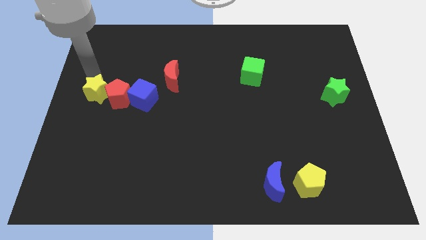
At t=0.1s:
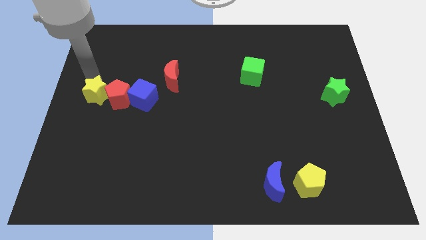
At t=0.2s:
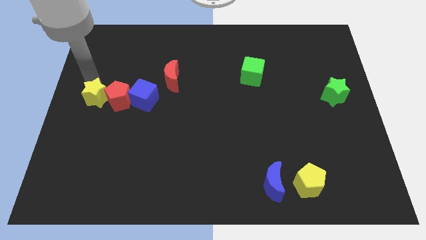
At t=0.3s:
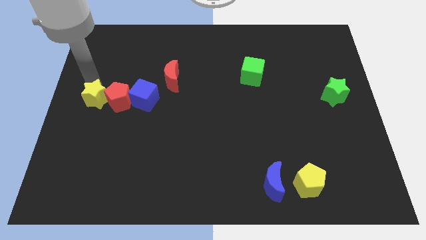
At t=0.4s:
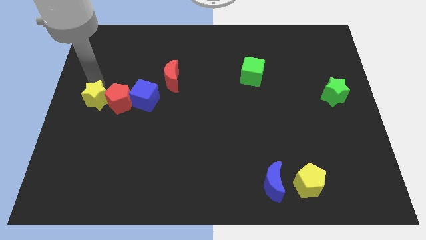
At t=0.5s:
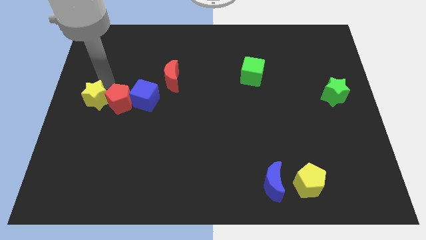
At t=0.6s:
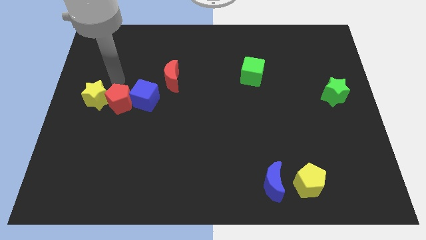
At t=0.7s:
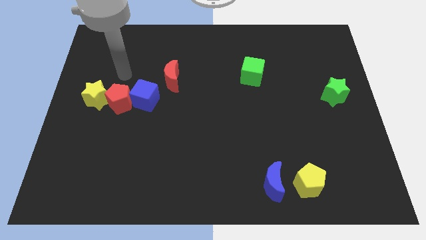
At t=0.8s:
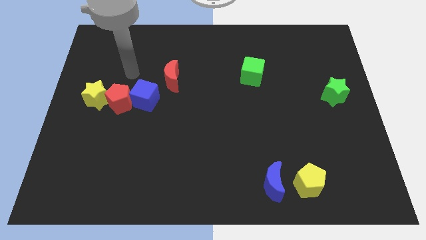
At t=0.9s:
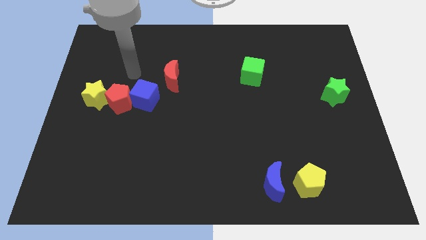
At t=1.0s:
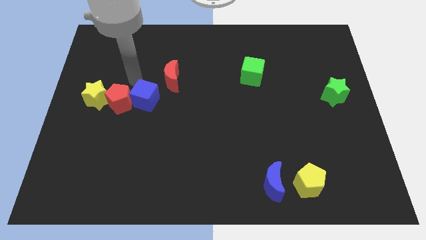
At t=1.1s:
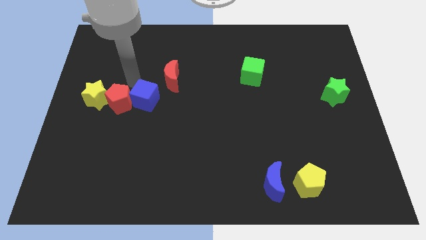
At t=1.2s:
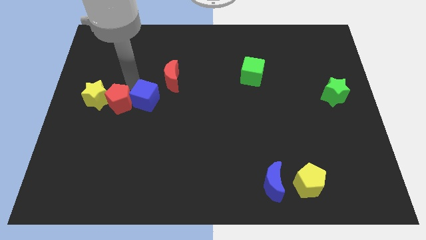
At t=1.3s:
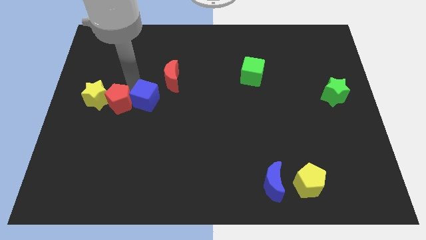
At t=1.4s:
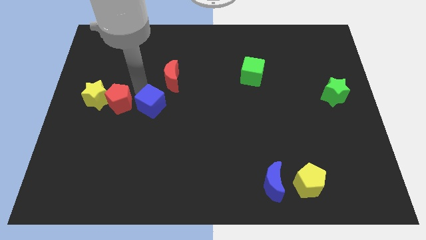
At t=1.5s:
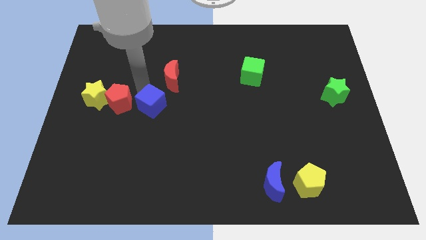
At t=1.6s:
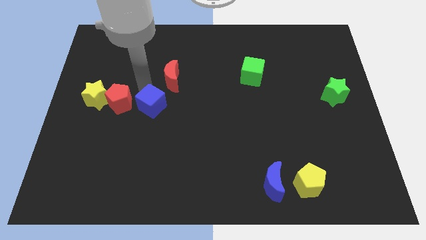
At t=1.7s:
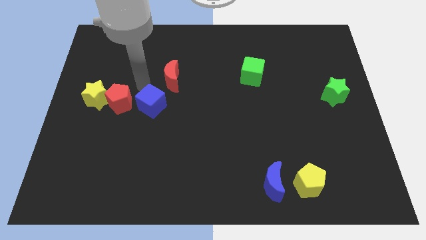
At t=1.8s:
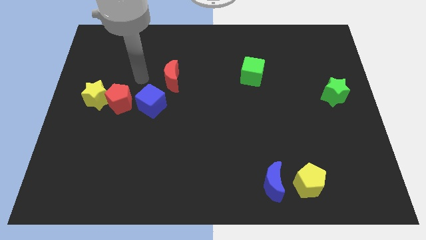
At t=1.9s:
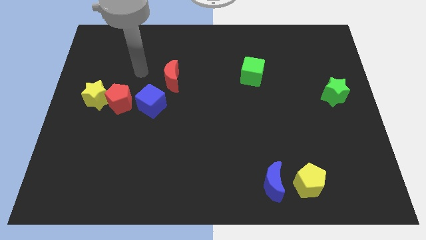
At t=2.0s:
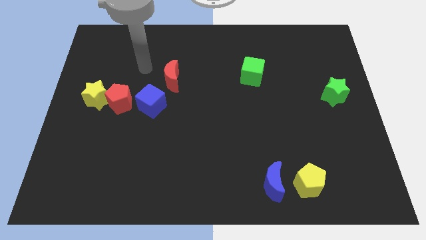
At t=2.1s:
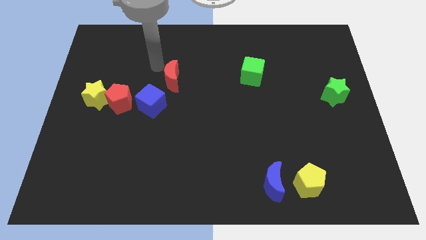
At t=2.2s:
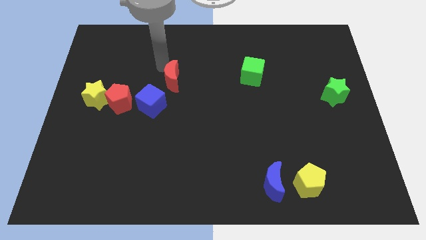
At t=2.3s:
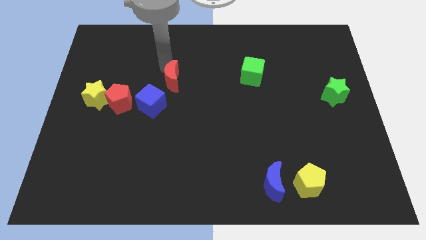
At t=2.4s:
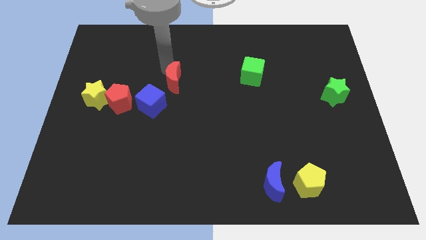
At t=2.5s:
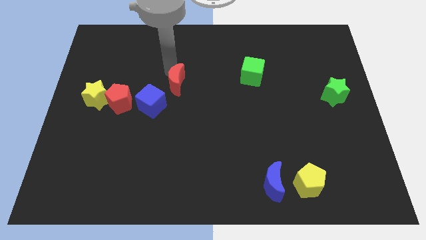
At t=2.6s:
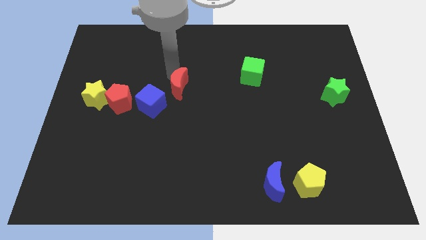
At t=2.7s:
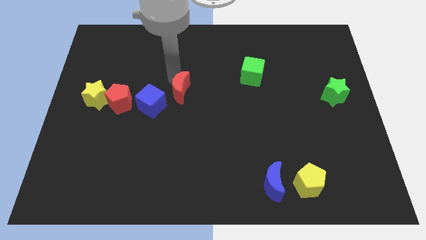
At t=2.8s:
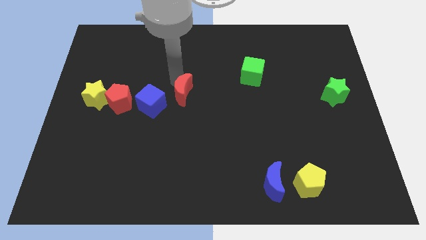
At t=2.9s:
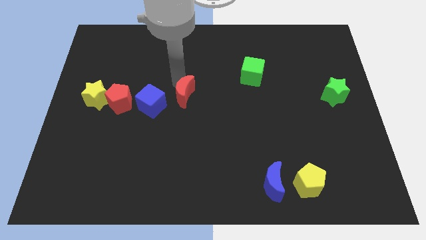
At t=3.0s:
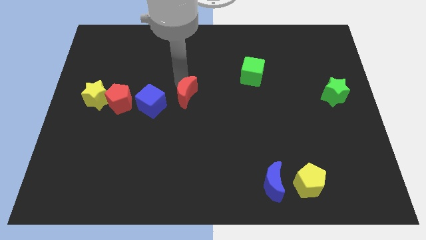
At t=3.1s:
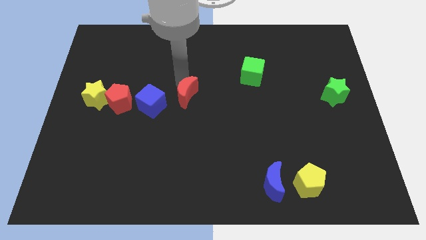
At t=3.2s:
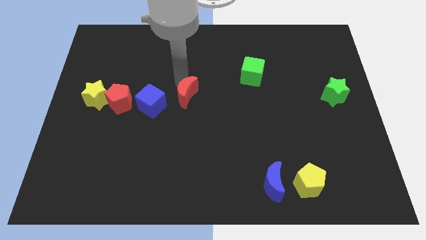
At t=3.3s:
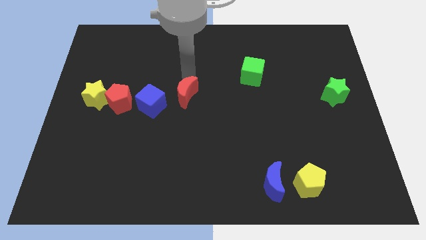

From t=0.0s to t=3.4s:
drag the red moon slightly downwards

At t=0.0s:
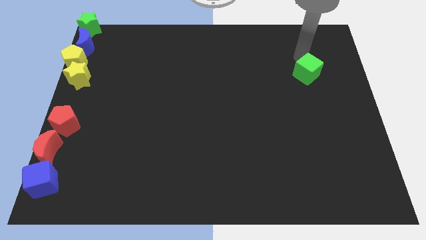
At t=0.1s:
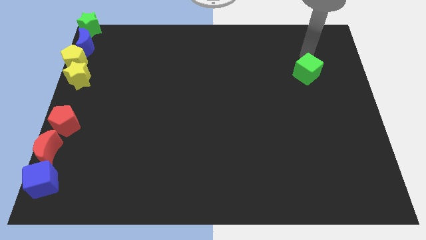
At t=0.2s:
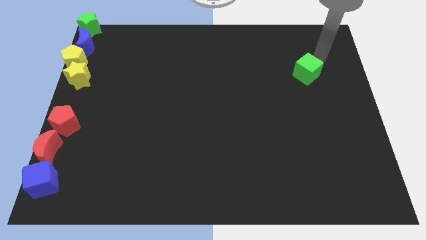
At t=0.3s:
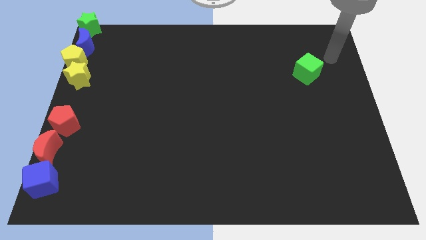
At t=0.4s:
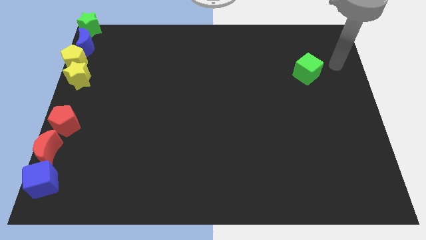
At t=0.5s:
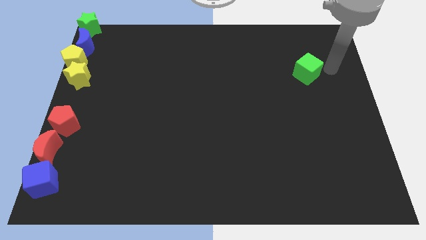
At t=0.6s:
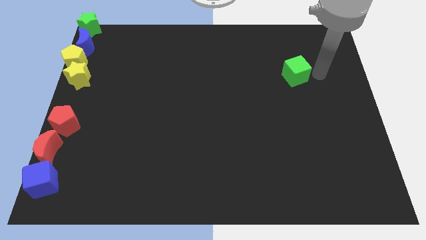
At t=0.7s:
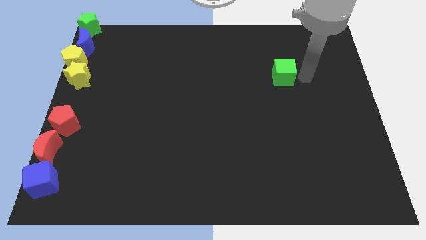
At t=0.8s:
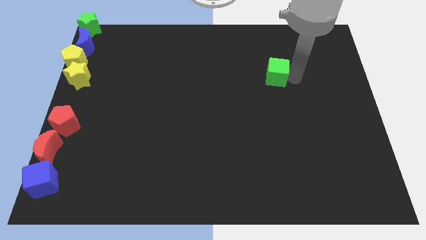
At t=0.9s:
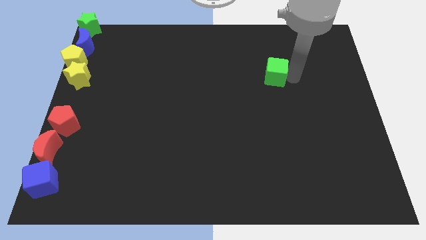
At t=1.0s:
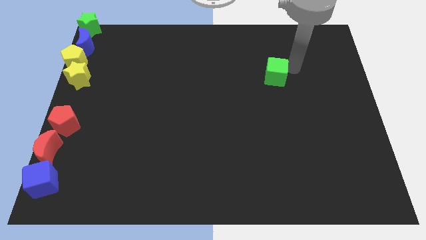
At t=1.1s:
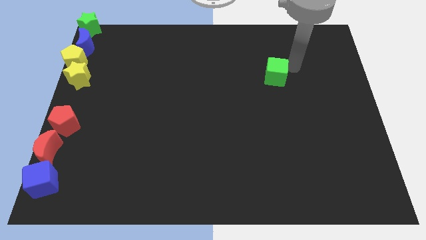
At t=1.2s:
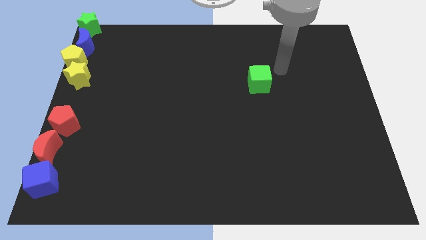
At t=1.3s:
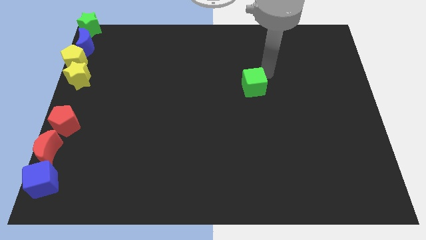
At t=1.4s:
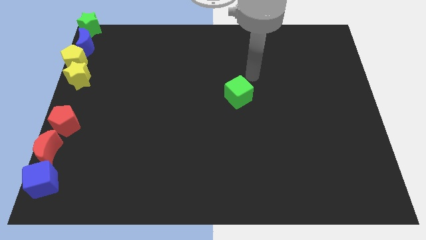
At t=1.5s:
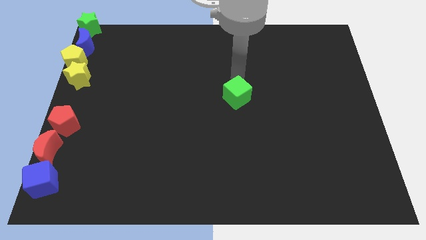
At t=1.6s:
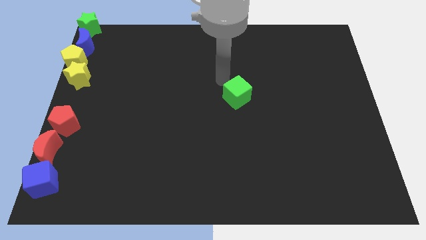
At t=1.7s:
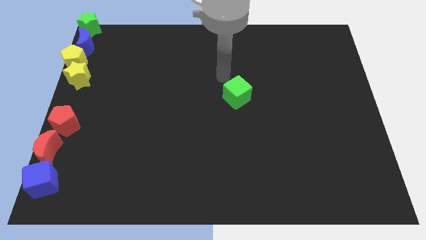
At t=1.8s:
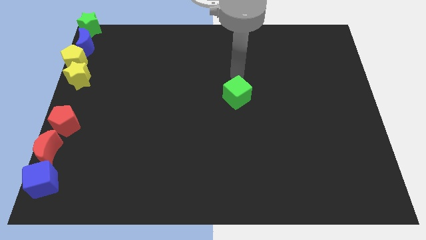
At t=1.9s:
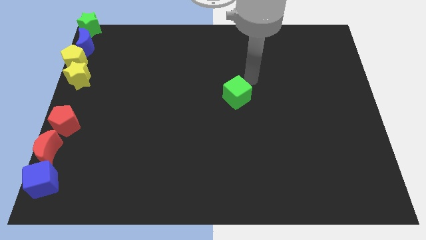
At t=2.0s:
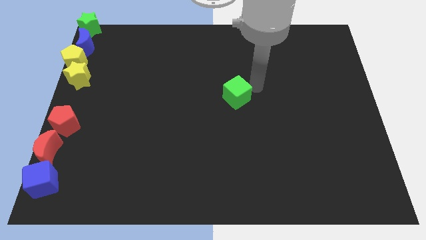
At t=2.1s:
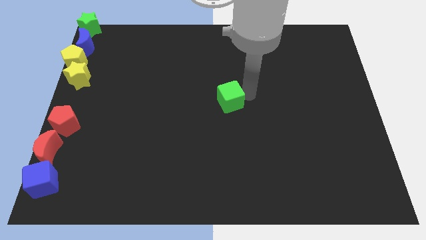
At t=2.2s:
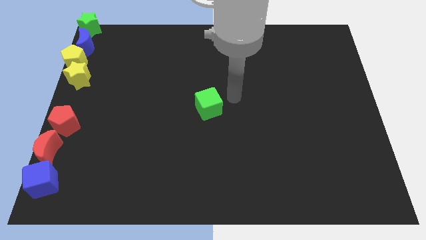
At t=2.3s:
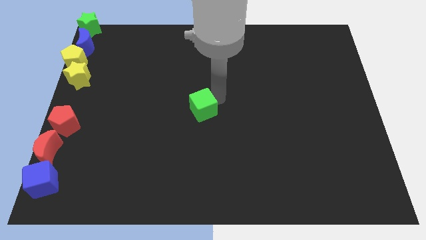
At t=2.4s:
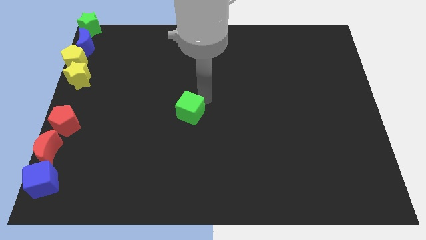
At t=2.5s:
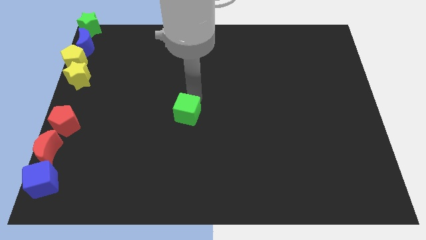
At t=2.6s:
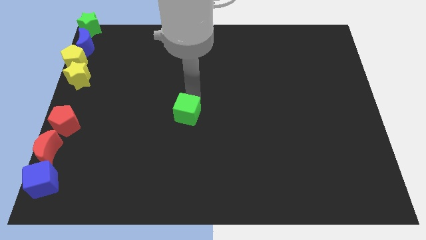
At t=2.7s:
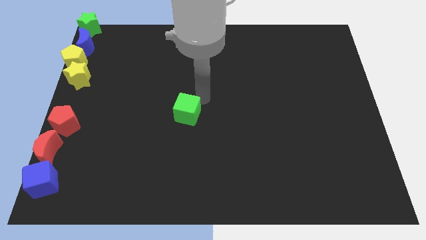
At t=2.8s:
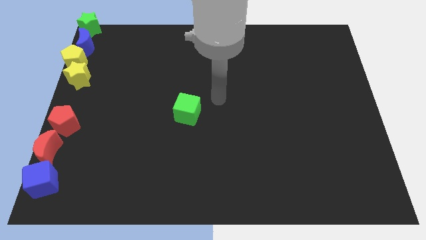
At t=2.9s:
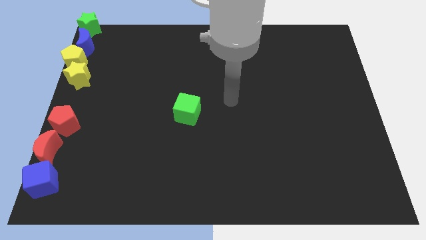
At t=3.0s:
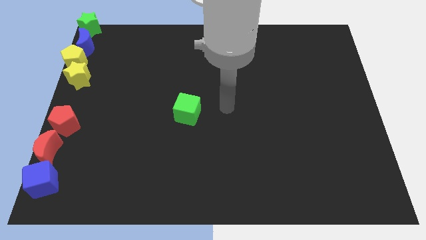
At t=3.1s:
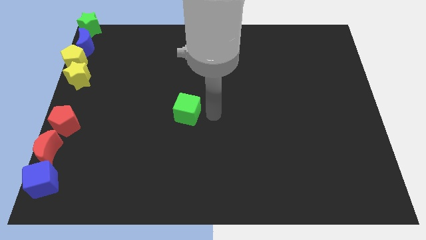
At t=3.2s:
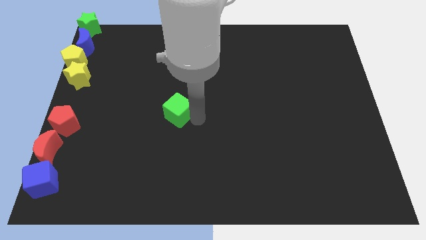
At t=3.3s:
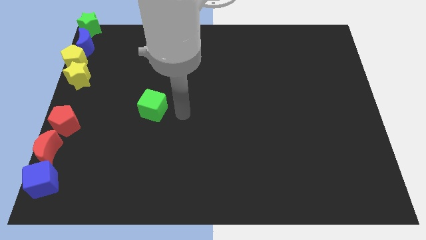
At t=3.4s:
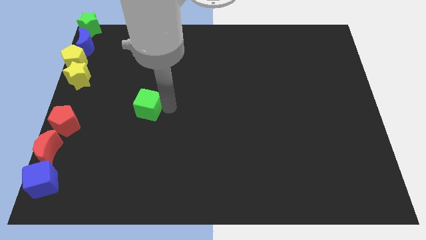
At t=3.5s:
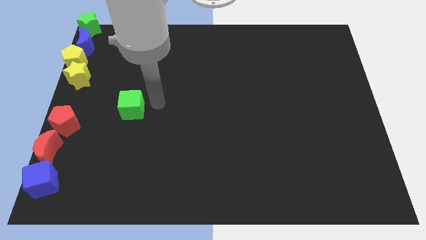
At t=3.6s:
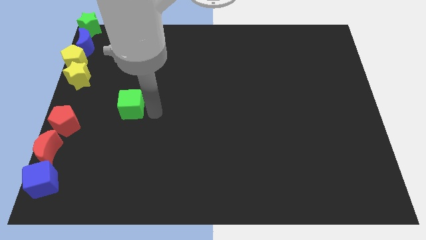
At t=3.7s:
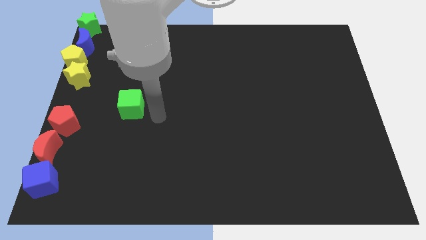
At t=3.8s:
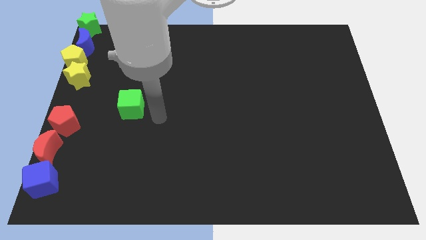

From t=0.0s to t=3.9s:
drag green cube towards middle left of the board

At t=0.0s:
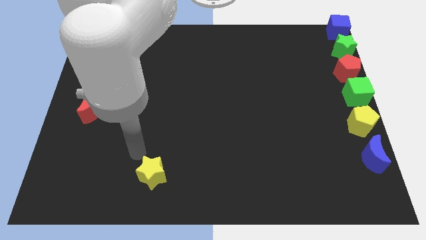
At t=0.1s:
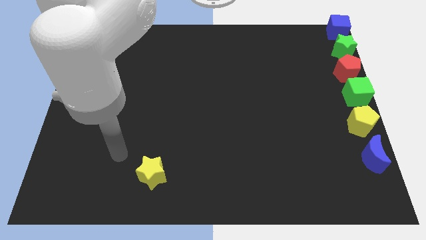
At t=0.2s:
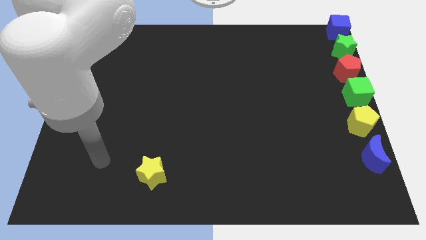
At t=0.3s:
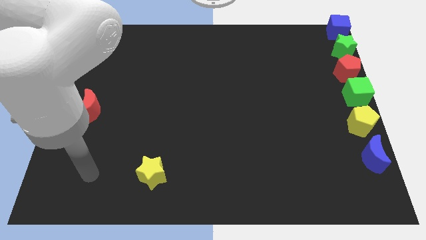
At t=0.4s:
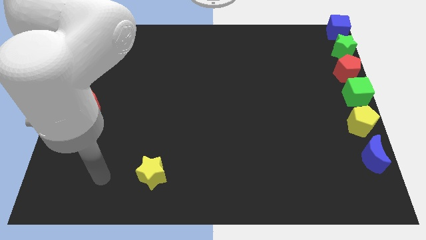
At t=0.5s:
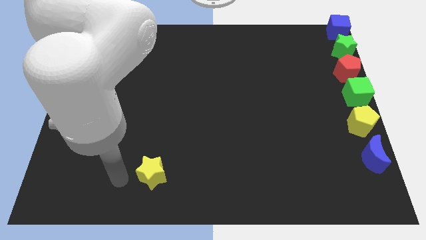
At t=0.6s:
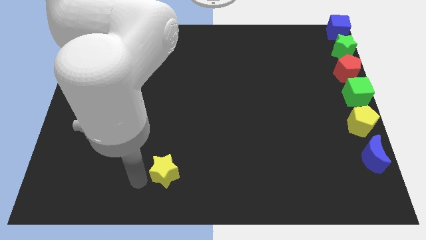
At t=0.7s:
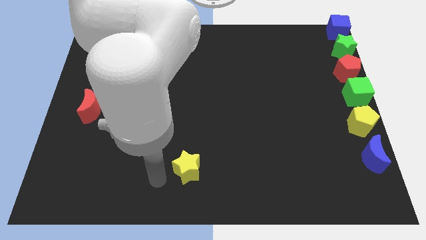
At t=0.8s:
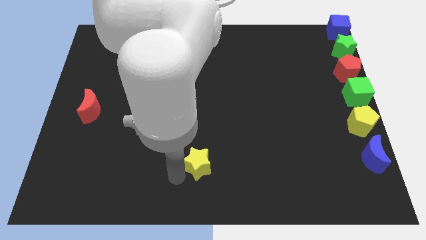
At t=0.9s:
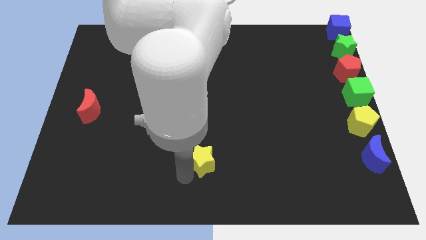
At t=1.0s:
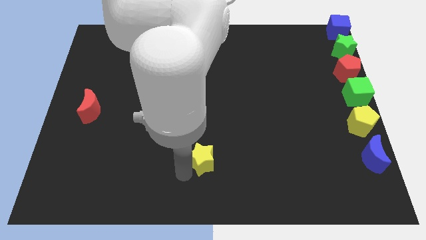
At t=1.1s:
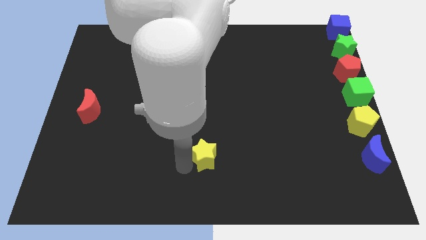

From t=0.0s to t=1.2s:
push the yellow star parallel to the blue crescent

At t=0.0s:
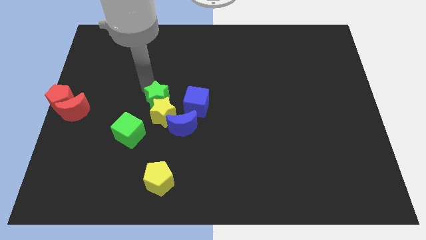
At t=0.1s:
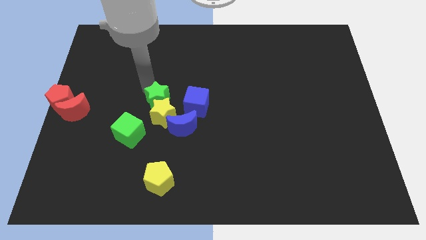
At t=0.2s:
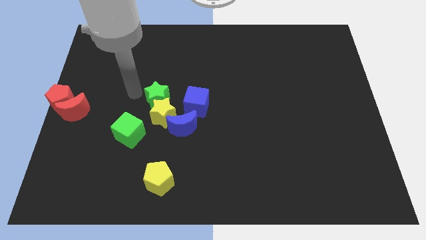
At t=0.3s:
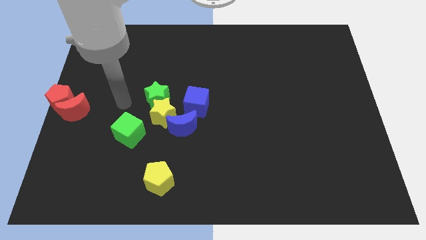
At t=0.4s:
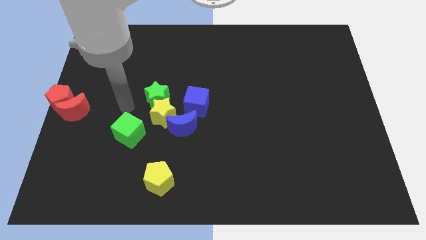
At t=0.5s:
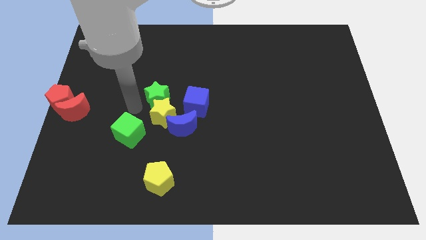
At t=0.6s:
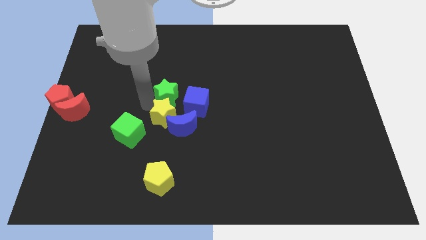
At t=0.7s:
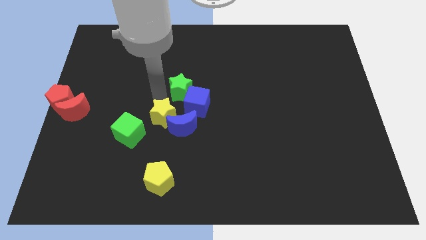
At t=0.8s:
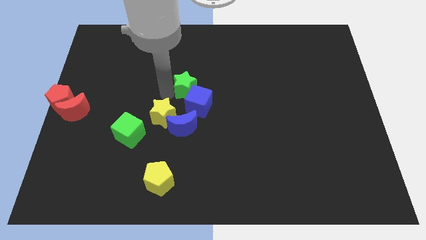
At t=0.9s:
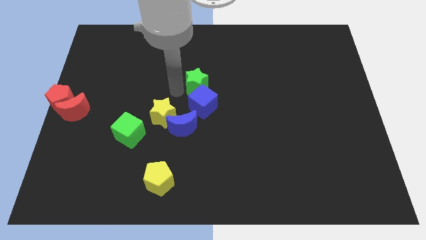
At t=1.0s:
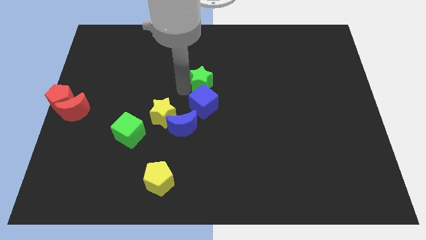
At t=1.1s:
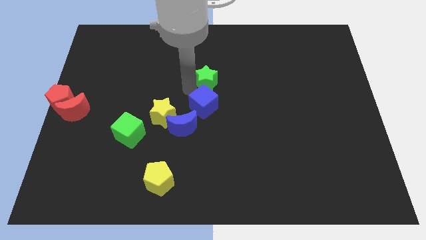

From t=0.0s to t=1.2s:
separate the green star from the yellow star
